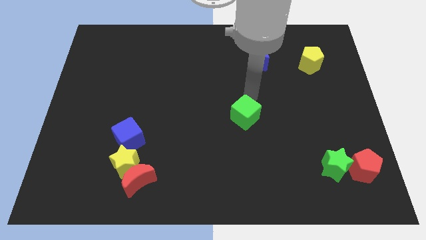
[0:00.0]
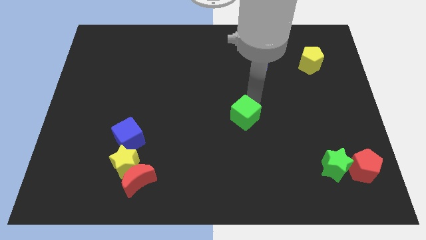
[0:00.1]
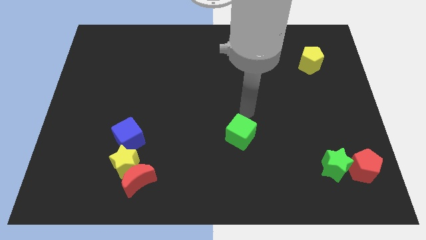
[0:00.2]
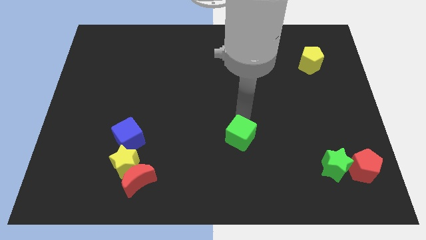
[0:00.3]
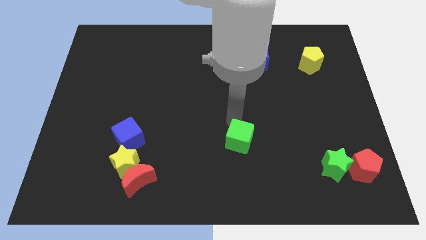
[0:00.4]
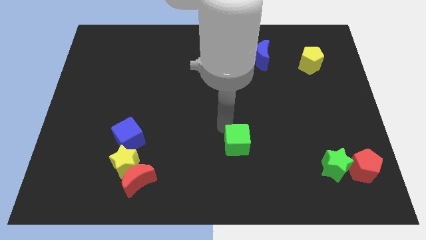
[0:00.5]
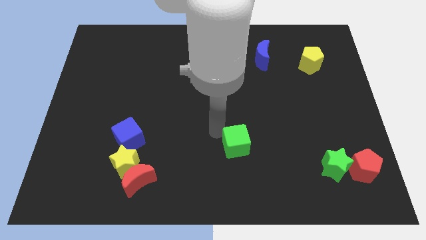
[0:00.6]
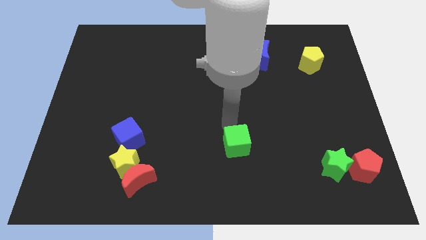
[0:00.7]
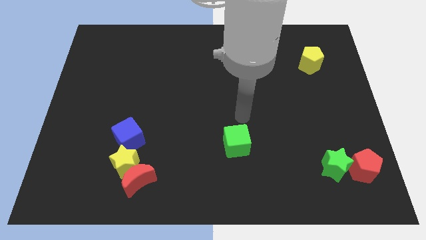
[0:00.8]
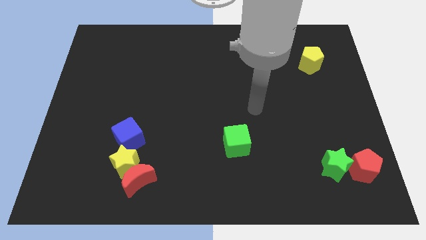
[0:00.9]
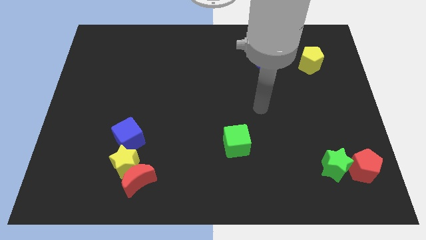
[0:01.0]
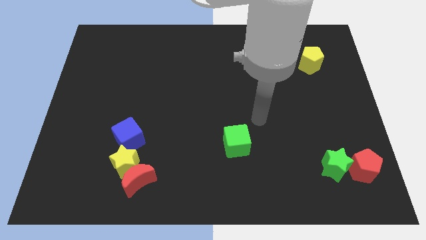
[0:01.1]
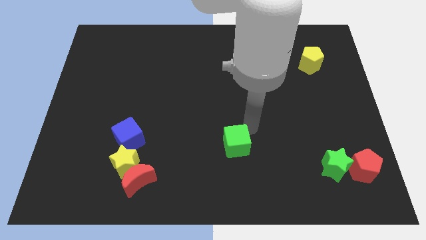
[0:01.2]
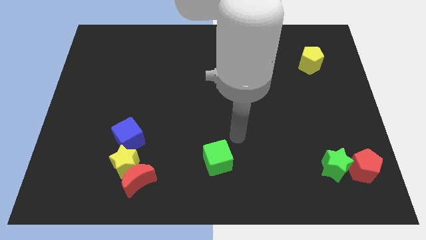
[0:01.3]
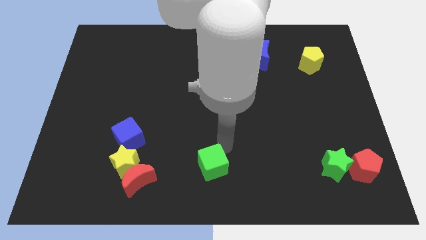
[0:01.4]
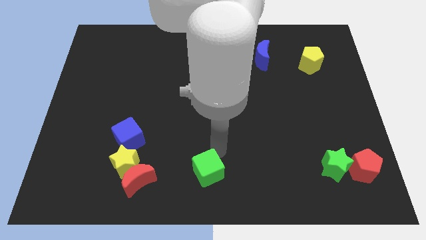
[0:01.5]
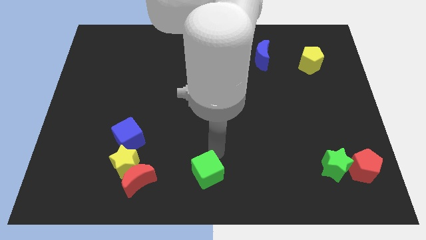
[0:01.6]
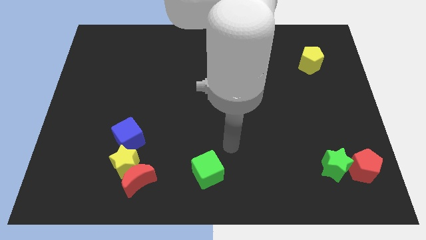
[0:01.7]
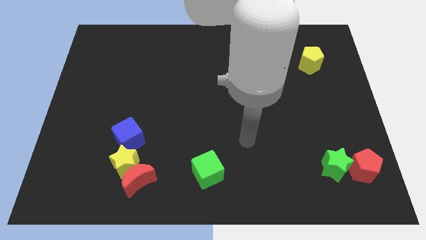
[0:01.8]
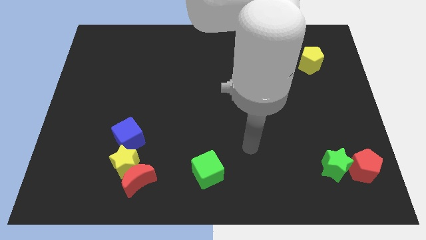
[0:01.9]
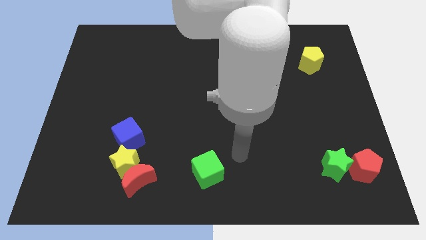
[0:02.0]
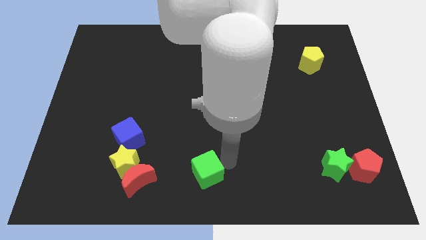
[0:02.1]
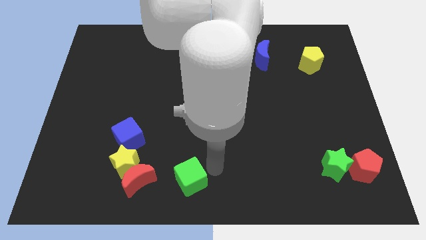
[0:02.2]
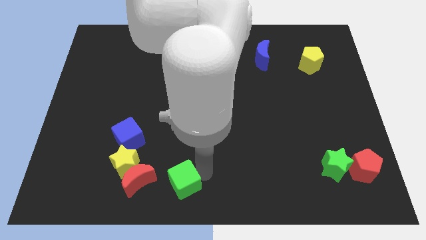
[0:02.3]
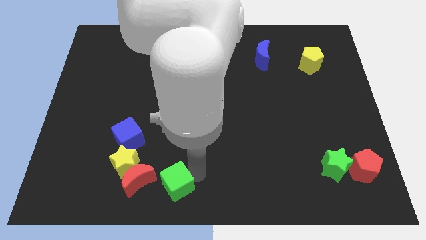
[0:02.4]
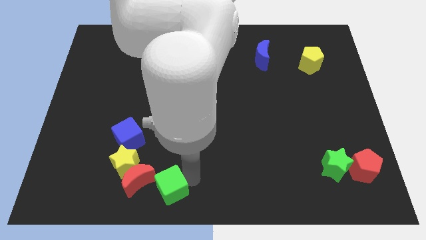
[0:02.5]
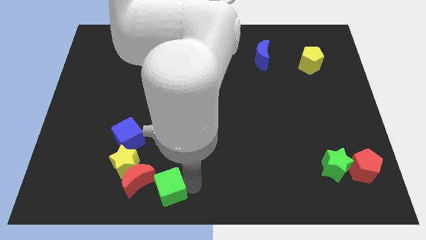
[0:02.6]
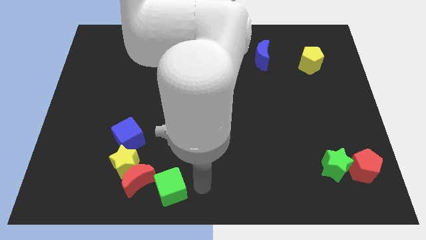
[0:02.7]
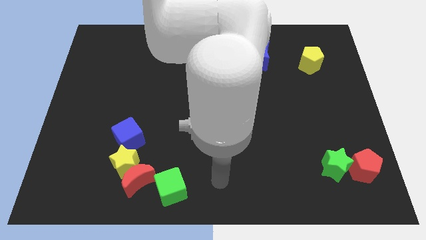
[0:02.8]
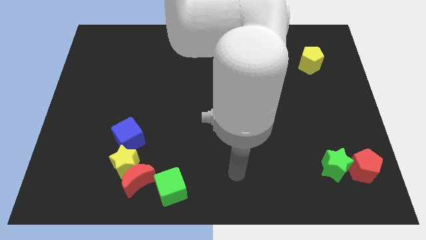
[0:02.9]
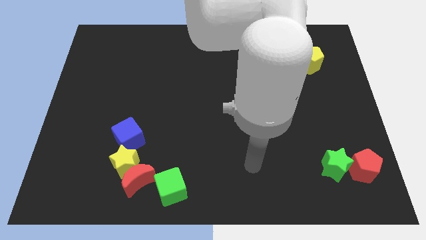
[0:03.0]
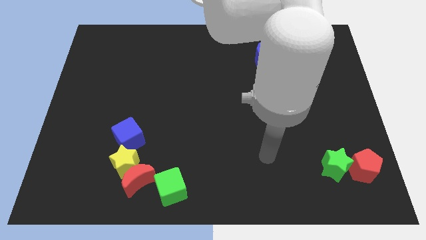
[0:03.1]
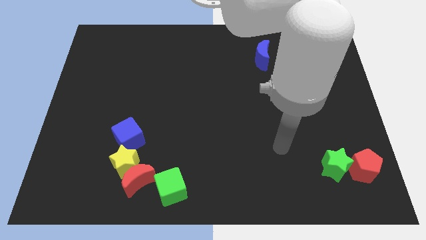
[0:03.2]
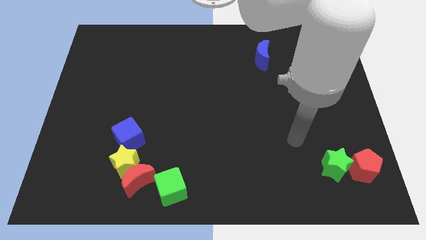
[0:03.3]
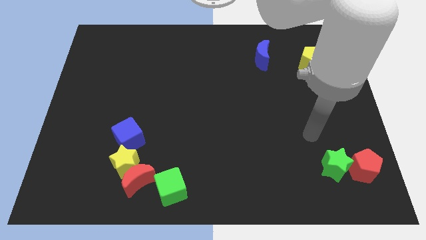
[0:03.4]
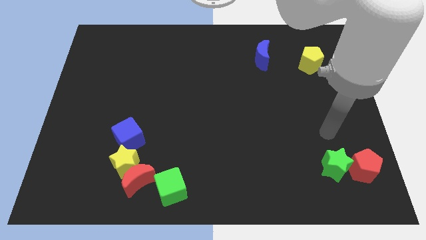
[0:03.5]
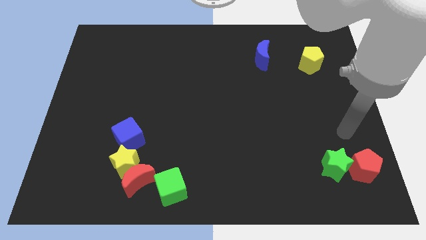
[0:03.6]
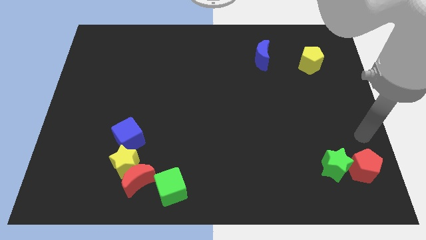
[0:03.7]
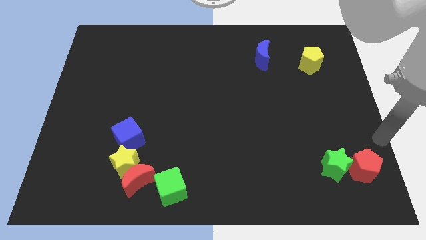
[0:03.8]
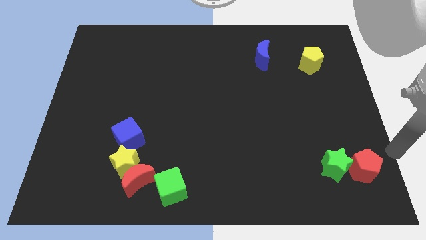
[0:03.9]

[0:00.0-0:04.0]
place the green cube to the right side of the red moon

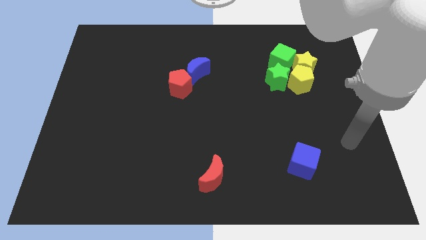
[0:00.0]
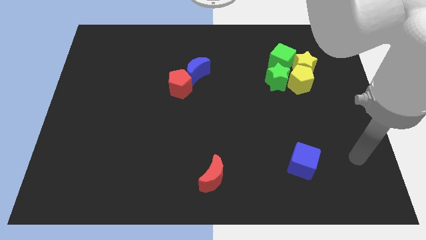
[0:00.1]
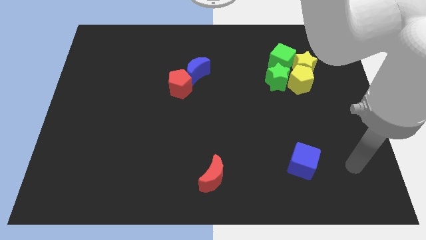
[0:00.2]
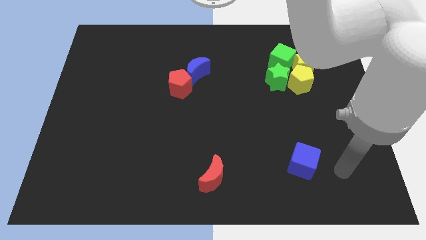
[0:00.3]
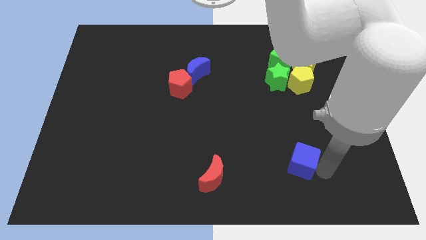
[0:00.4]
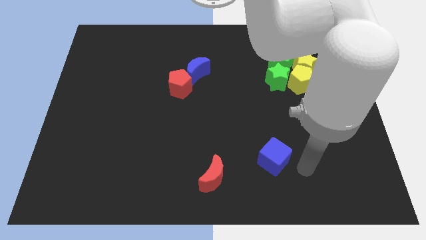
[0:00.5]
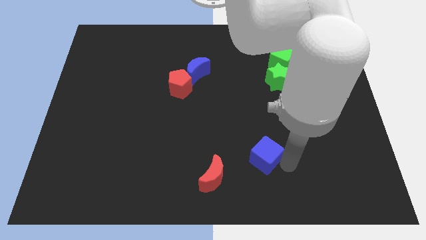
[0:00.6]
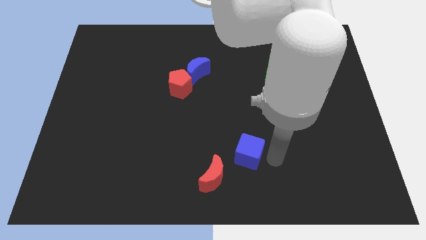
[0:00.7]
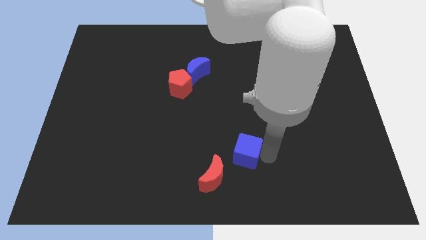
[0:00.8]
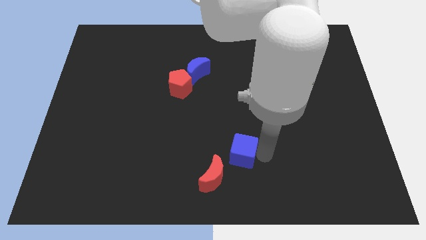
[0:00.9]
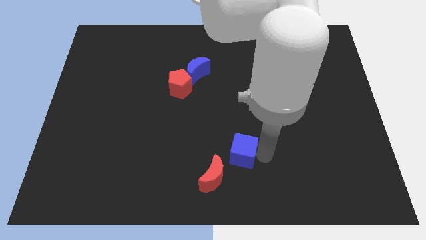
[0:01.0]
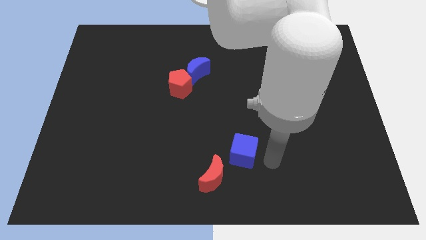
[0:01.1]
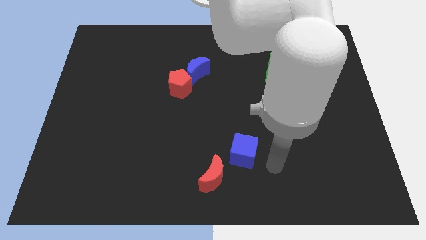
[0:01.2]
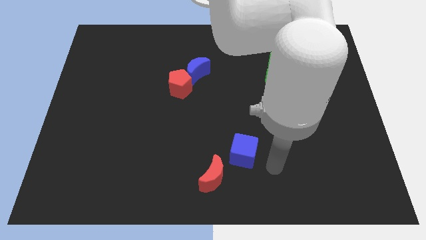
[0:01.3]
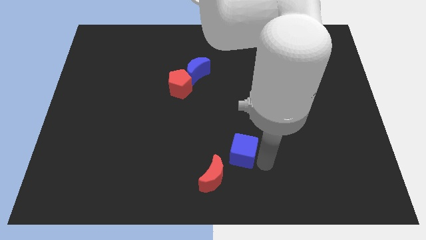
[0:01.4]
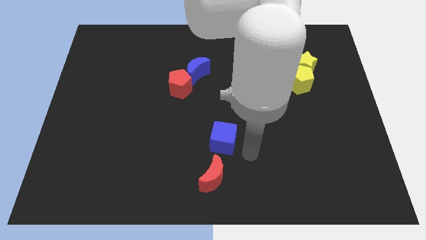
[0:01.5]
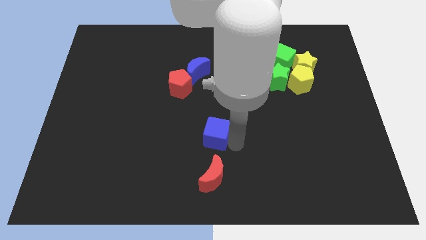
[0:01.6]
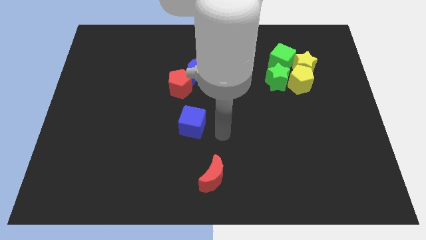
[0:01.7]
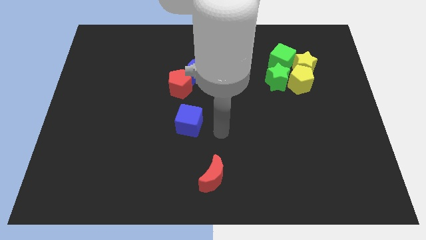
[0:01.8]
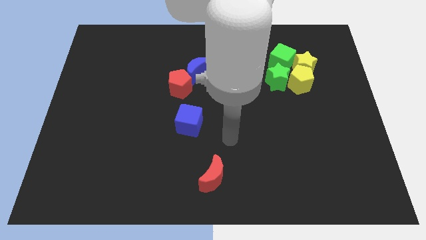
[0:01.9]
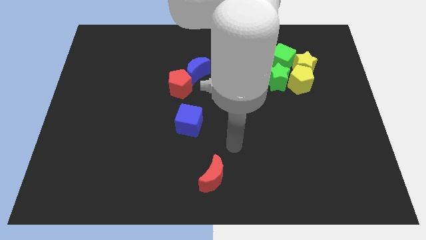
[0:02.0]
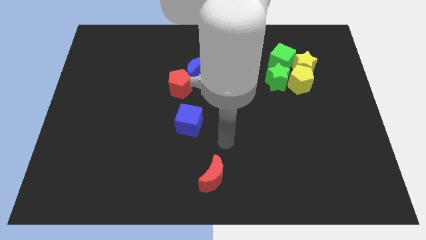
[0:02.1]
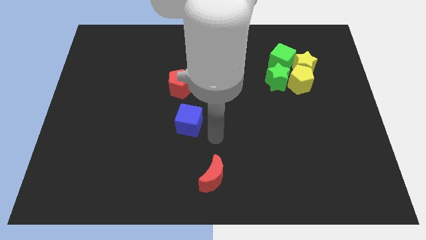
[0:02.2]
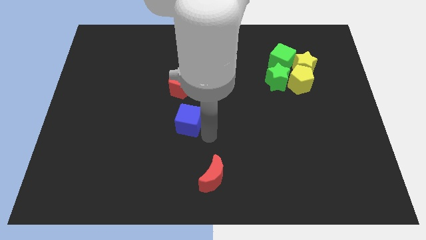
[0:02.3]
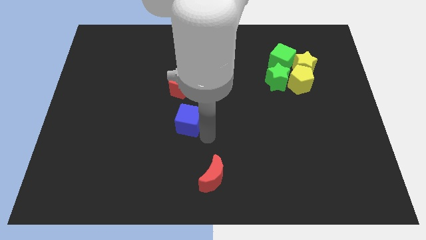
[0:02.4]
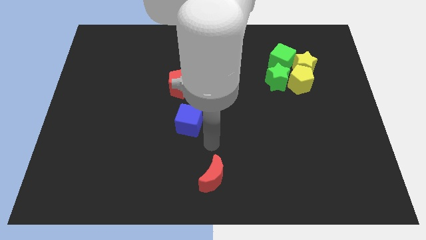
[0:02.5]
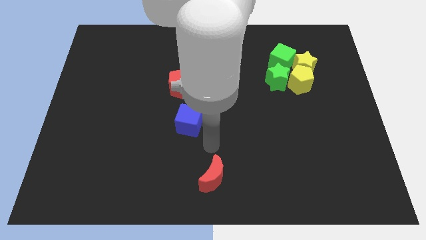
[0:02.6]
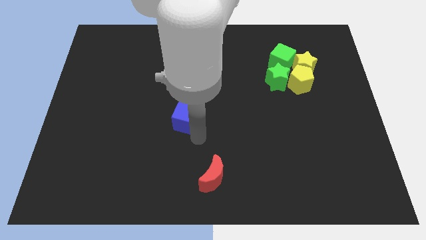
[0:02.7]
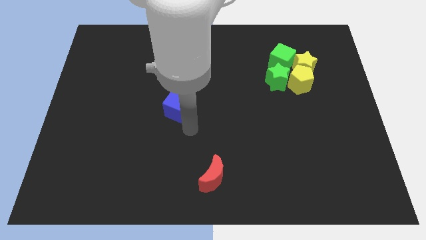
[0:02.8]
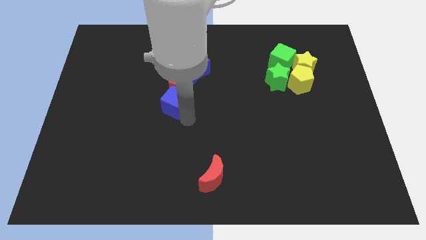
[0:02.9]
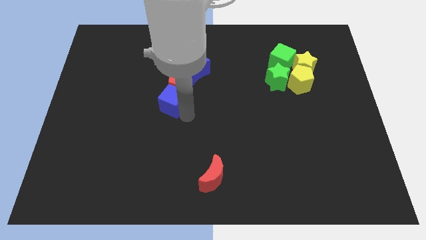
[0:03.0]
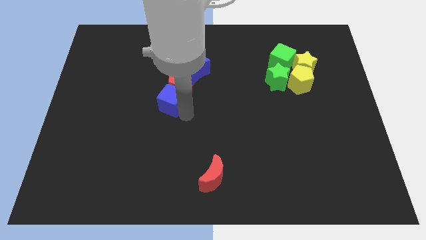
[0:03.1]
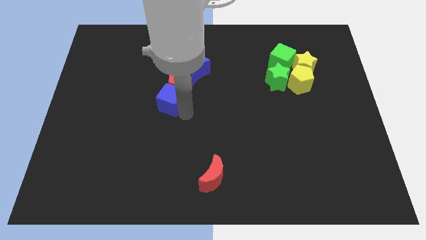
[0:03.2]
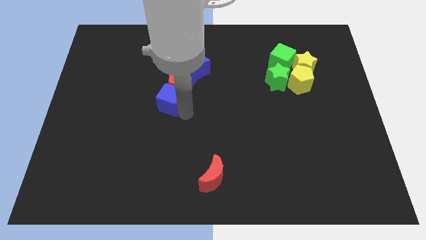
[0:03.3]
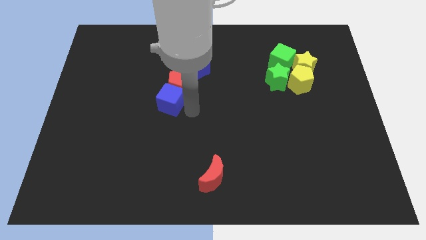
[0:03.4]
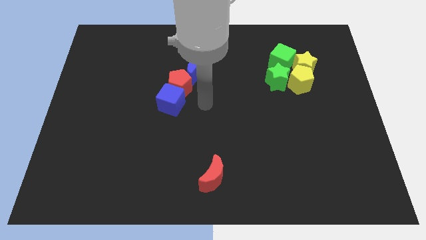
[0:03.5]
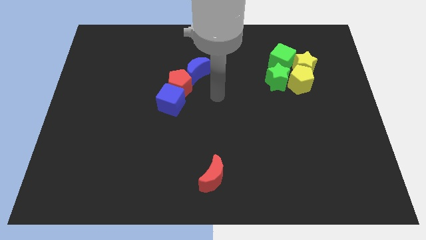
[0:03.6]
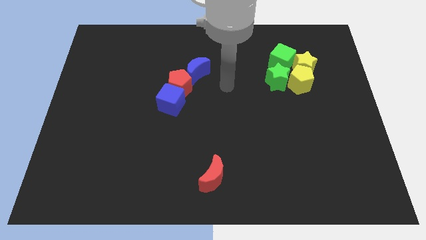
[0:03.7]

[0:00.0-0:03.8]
move the blue cube to the bottom left side of the red pentagon

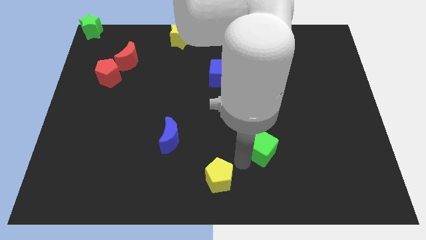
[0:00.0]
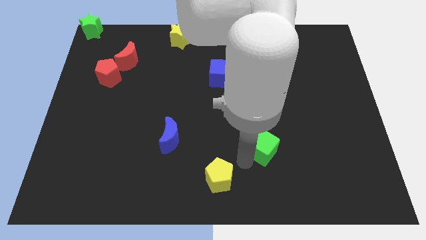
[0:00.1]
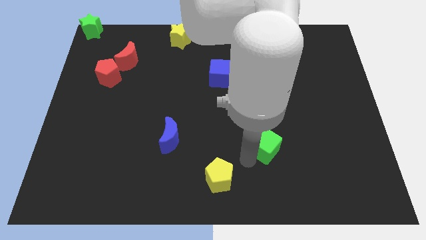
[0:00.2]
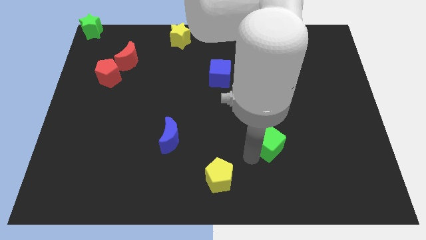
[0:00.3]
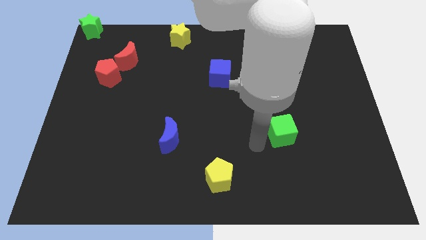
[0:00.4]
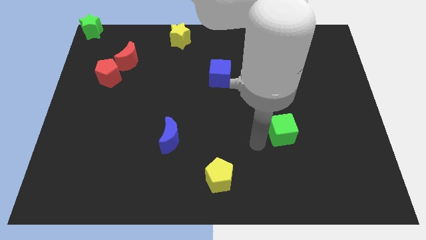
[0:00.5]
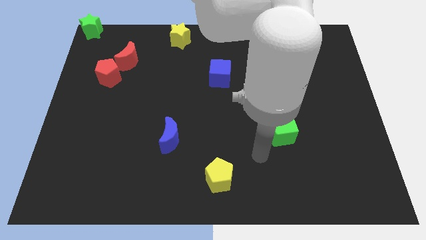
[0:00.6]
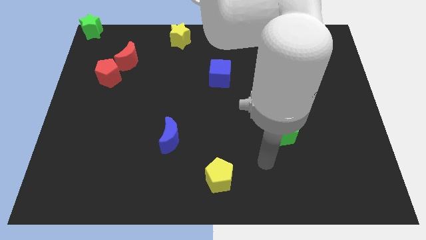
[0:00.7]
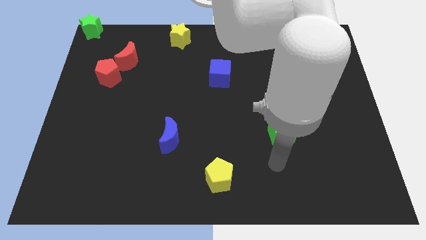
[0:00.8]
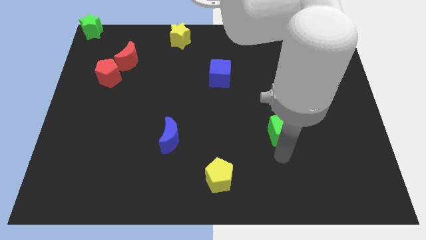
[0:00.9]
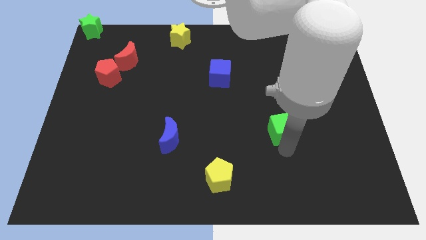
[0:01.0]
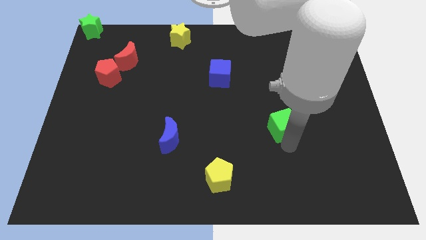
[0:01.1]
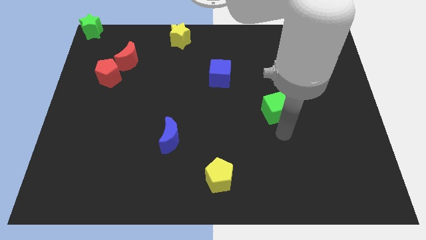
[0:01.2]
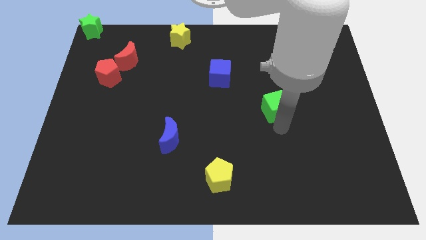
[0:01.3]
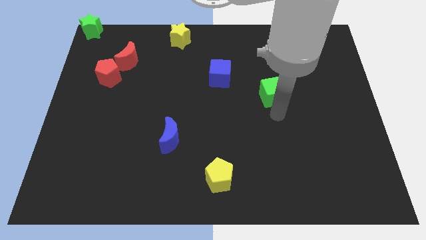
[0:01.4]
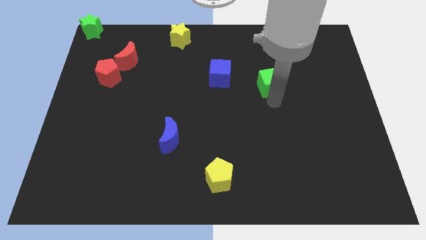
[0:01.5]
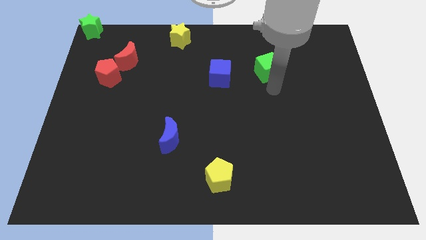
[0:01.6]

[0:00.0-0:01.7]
move green cube to the right of blue cube
